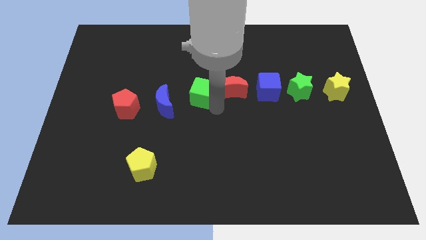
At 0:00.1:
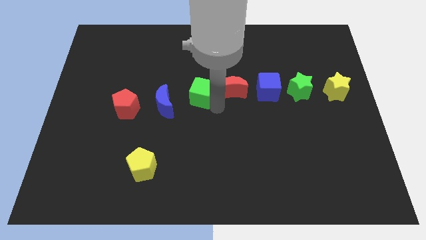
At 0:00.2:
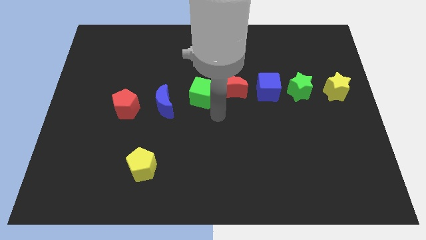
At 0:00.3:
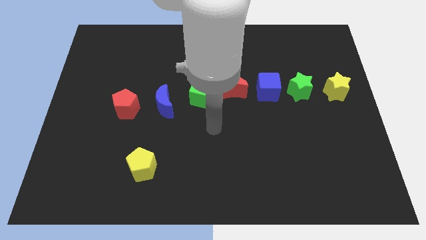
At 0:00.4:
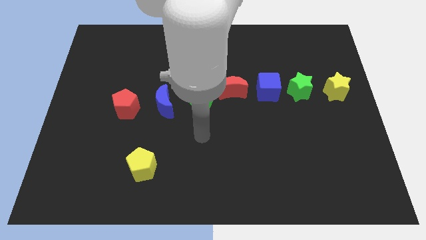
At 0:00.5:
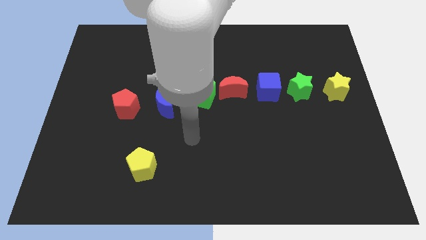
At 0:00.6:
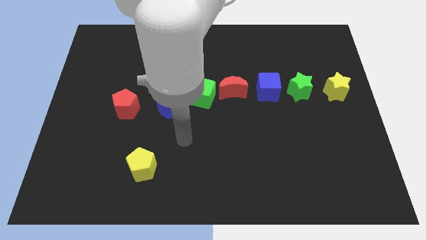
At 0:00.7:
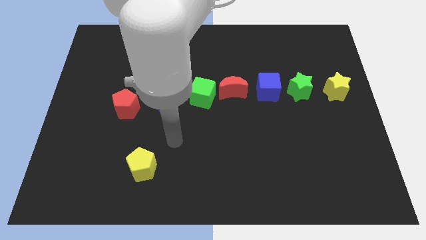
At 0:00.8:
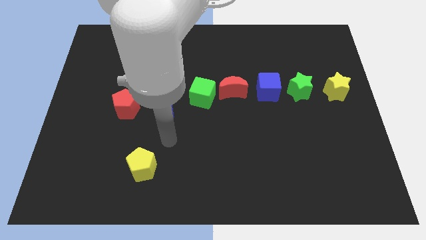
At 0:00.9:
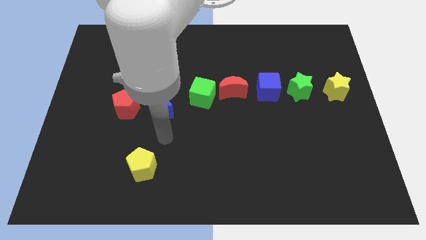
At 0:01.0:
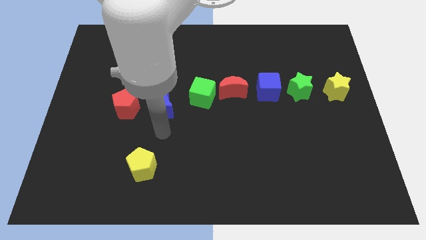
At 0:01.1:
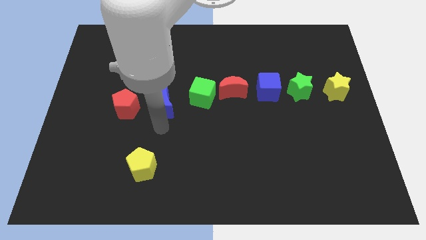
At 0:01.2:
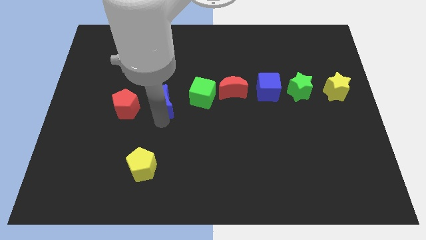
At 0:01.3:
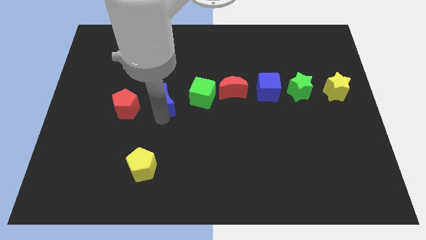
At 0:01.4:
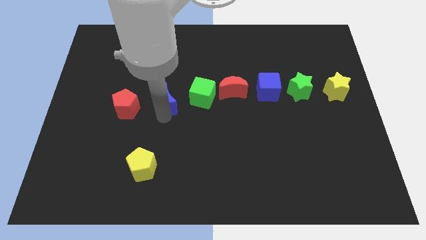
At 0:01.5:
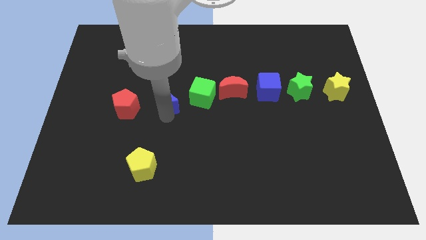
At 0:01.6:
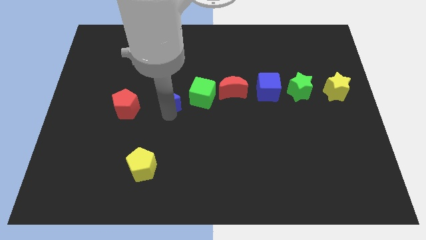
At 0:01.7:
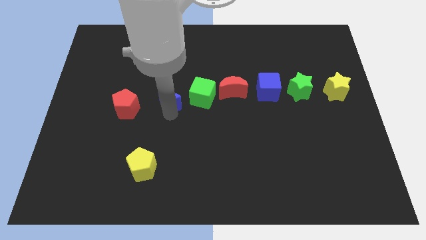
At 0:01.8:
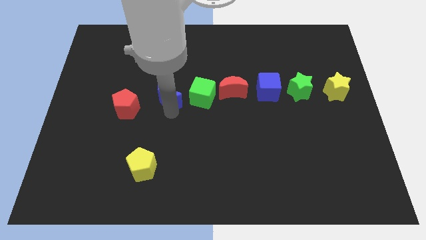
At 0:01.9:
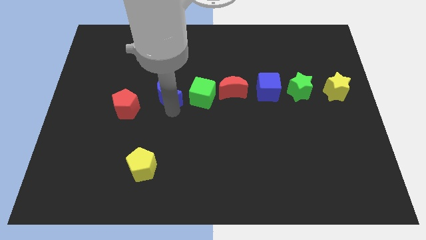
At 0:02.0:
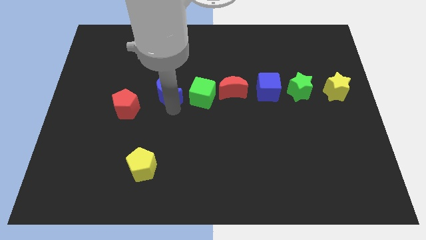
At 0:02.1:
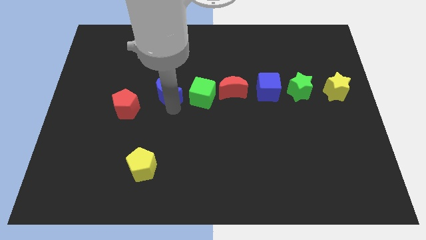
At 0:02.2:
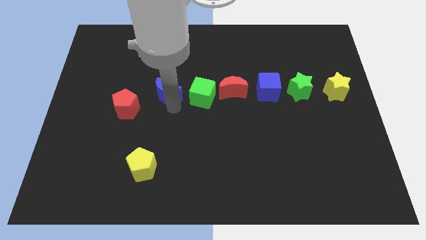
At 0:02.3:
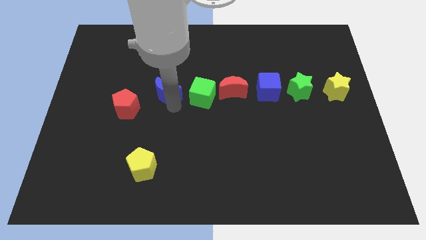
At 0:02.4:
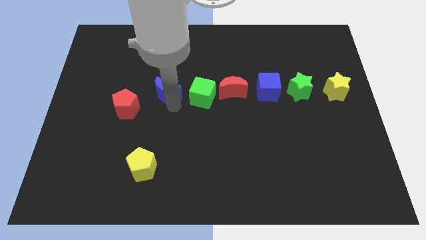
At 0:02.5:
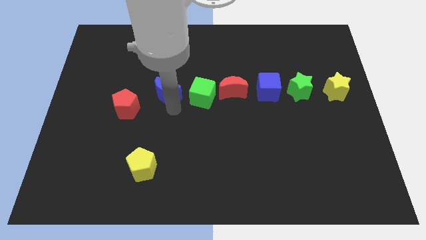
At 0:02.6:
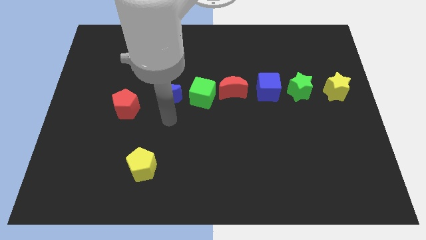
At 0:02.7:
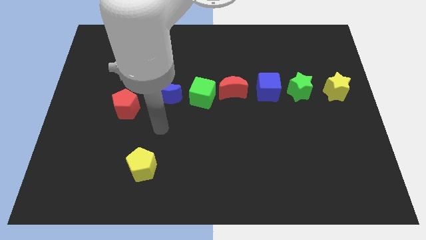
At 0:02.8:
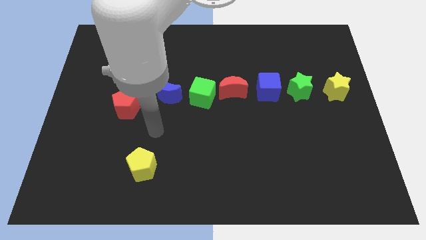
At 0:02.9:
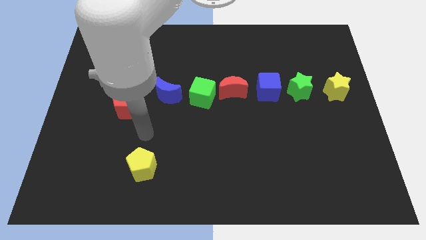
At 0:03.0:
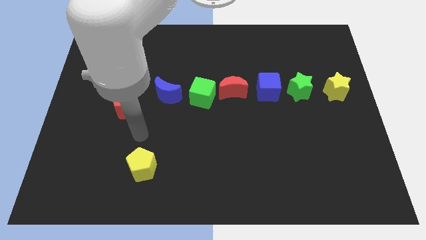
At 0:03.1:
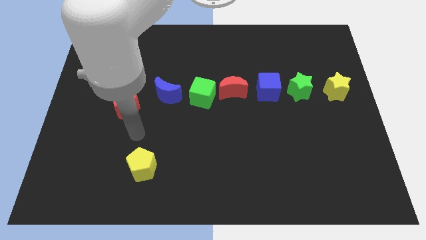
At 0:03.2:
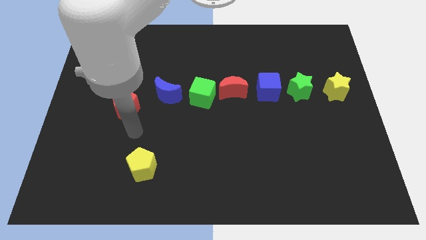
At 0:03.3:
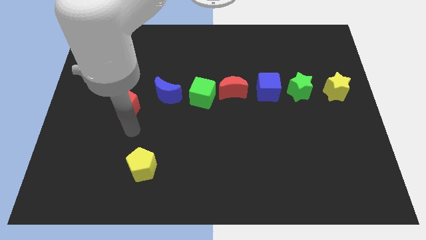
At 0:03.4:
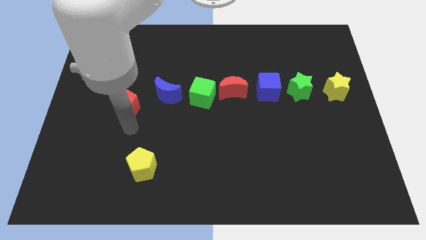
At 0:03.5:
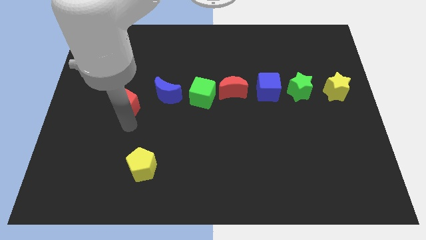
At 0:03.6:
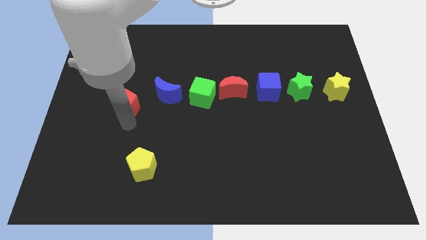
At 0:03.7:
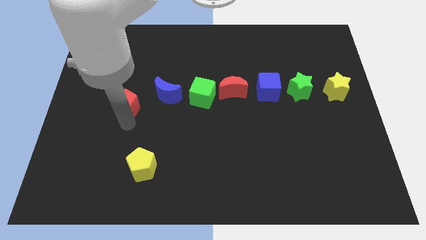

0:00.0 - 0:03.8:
push the blue crescent slightly to the top

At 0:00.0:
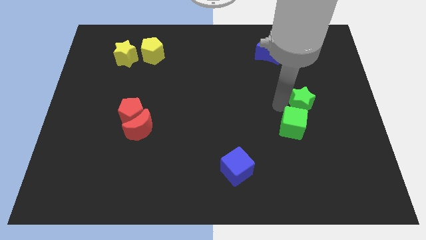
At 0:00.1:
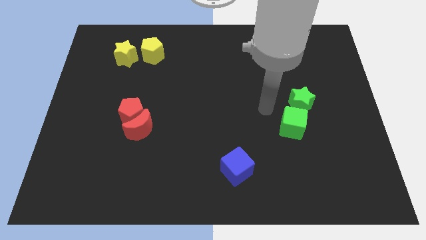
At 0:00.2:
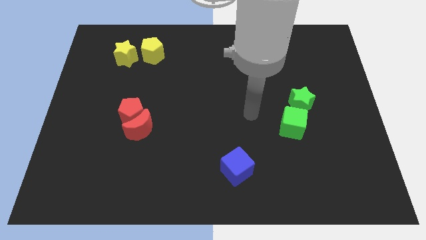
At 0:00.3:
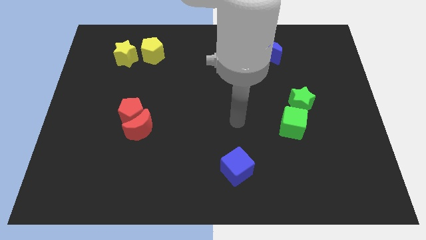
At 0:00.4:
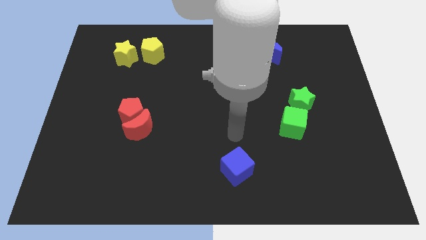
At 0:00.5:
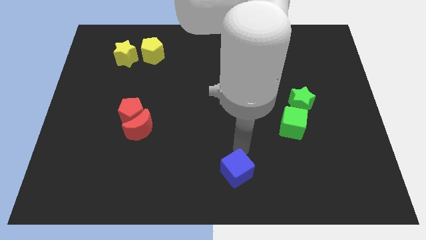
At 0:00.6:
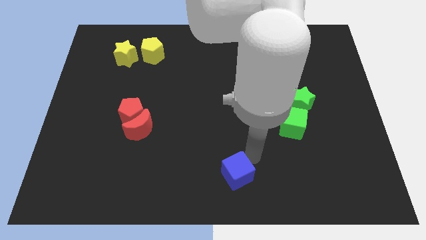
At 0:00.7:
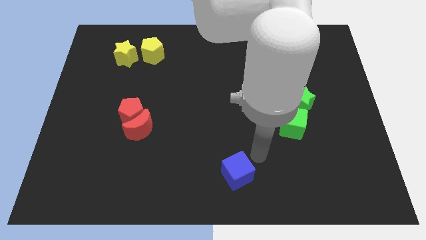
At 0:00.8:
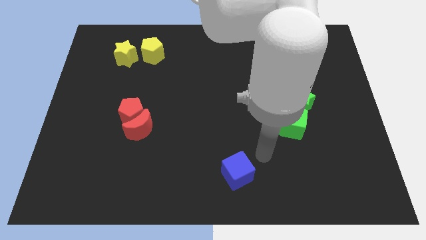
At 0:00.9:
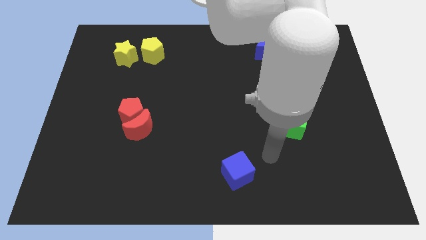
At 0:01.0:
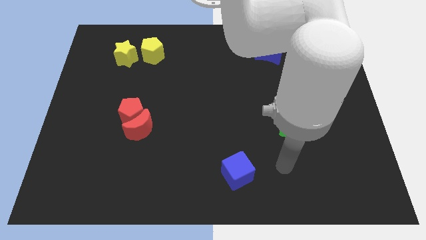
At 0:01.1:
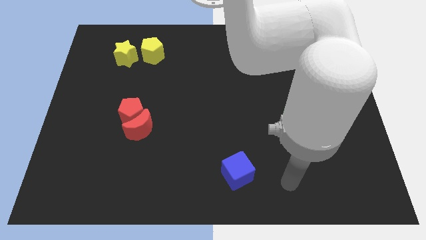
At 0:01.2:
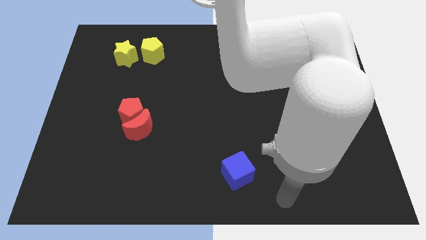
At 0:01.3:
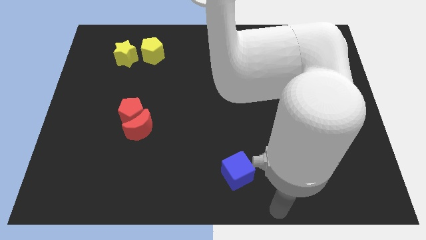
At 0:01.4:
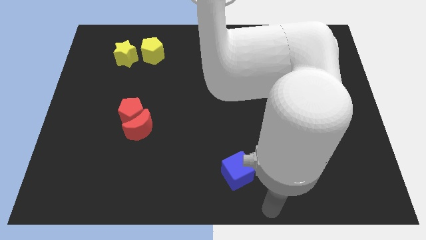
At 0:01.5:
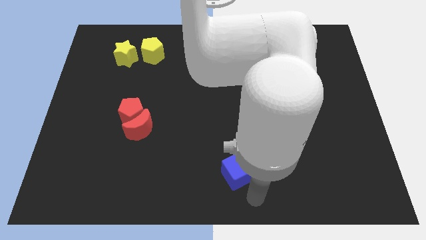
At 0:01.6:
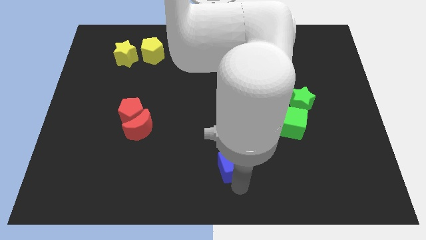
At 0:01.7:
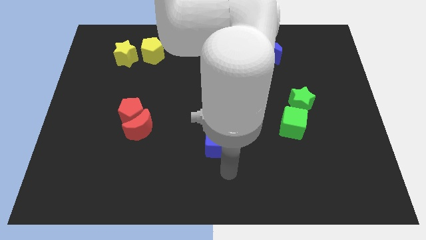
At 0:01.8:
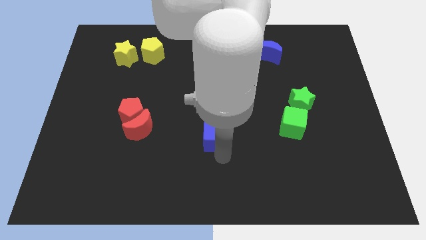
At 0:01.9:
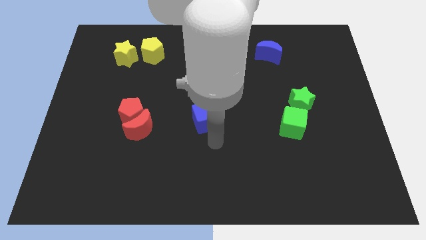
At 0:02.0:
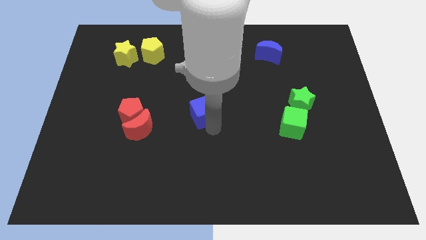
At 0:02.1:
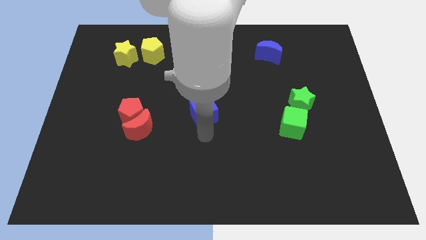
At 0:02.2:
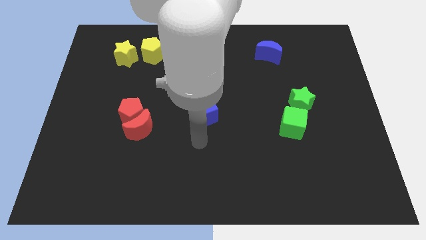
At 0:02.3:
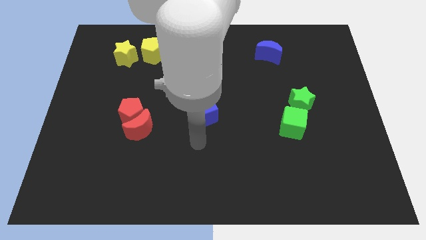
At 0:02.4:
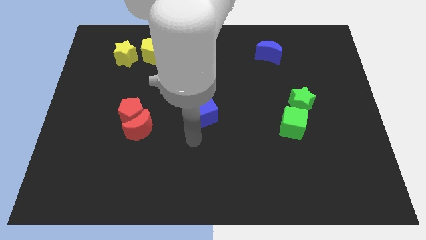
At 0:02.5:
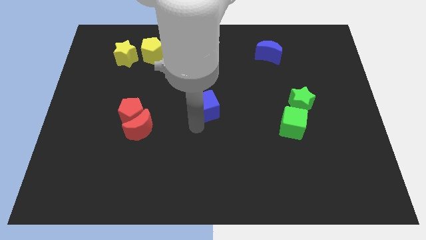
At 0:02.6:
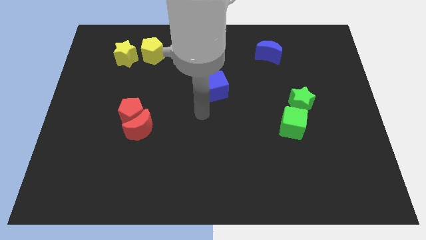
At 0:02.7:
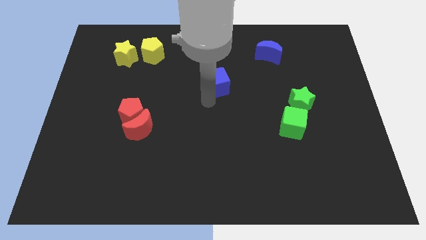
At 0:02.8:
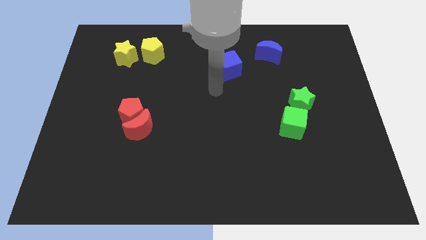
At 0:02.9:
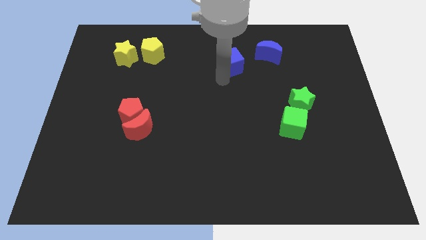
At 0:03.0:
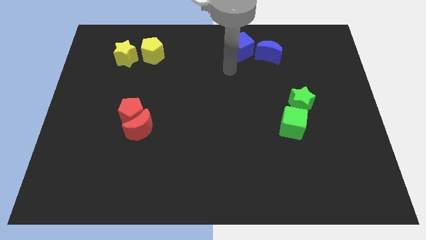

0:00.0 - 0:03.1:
go and push the blue cube to the top center of the board

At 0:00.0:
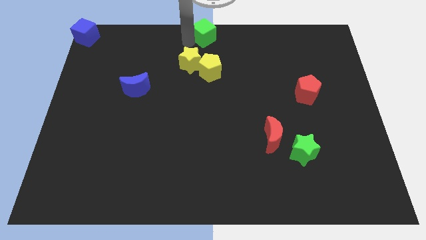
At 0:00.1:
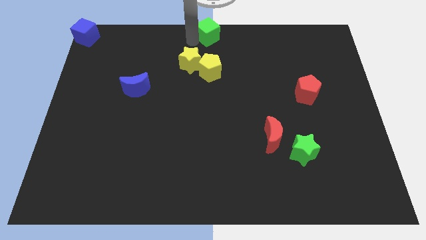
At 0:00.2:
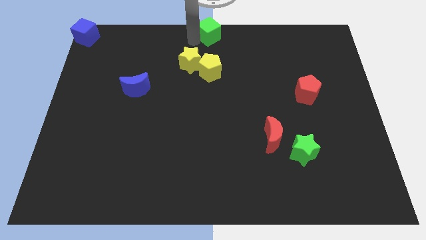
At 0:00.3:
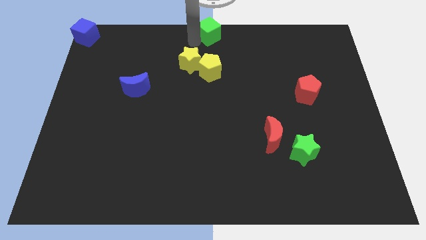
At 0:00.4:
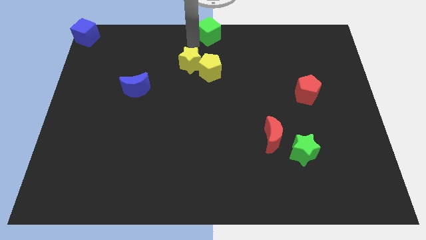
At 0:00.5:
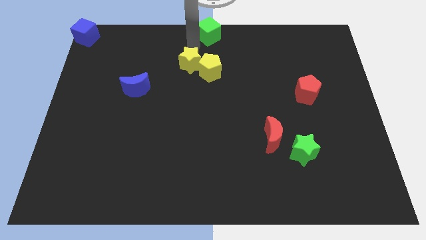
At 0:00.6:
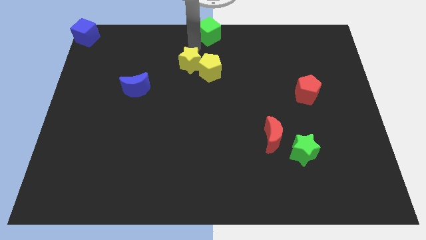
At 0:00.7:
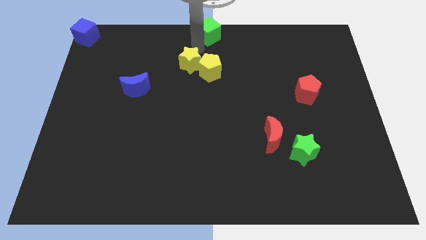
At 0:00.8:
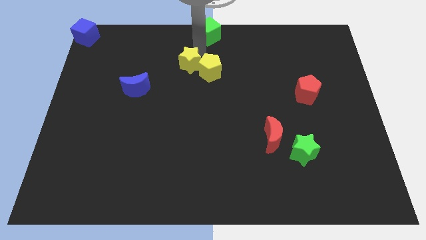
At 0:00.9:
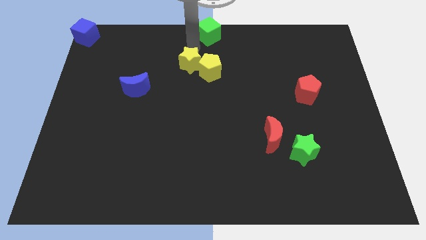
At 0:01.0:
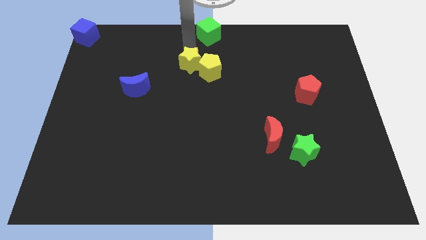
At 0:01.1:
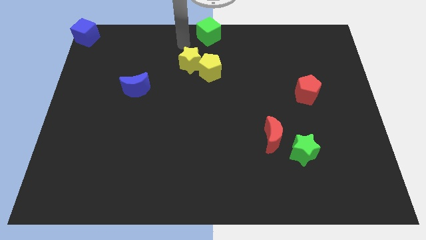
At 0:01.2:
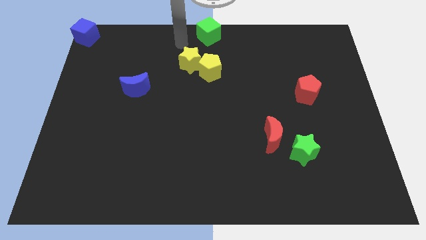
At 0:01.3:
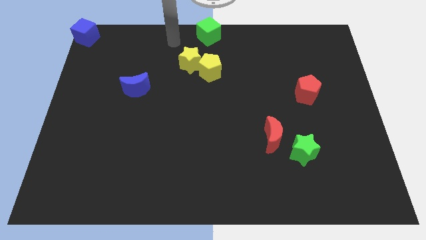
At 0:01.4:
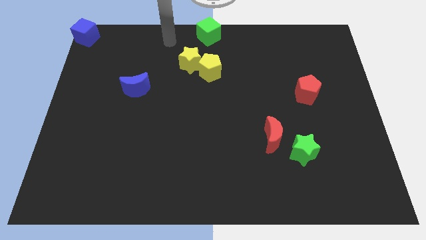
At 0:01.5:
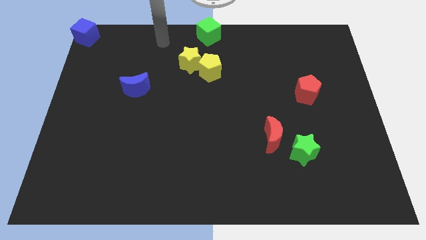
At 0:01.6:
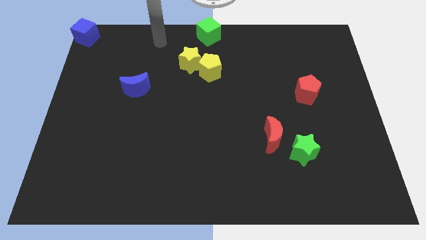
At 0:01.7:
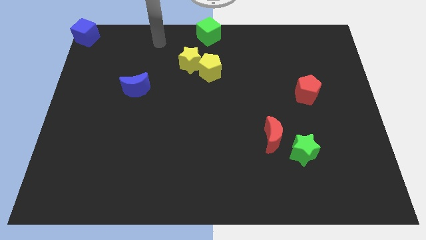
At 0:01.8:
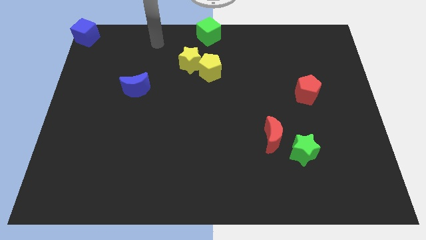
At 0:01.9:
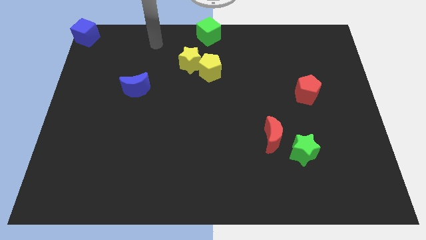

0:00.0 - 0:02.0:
move the green cube to the top center of the board
